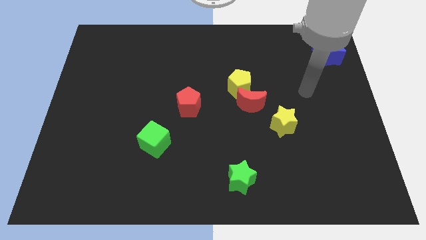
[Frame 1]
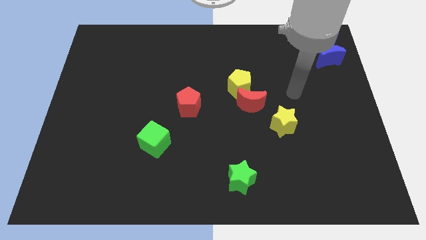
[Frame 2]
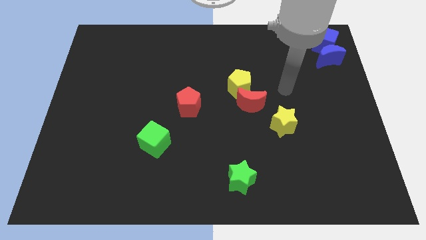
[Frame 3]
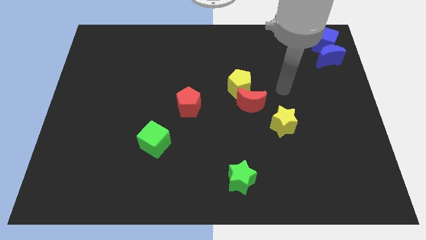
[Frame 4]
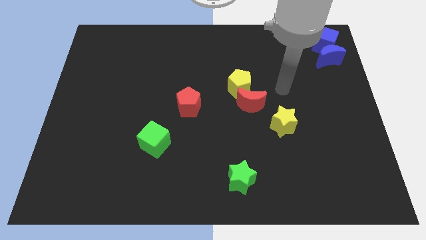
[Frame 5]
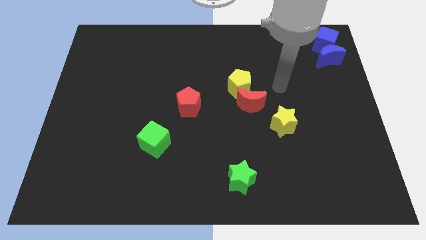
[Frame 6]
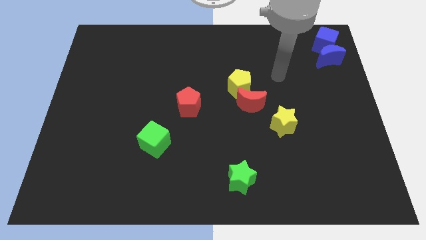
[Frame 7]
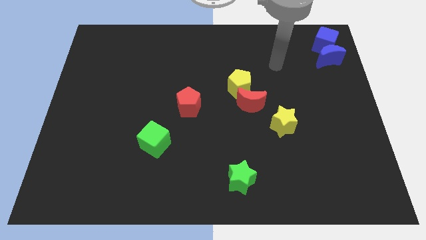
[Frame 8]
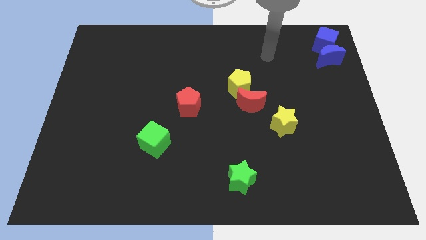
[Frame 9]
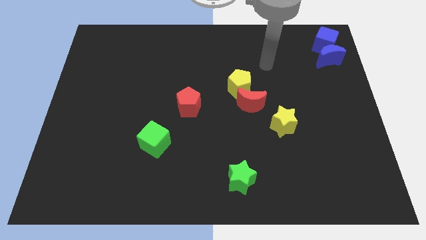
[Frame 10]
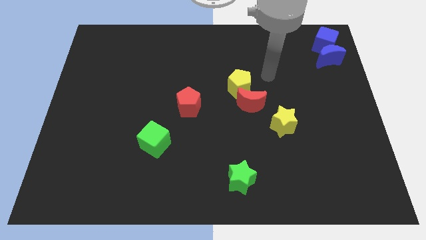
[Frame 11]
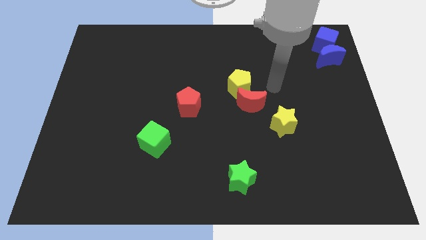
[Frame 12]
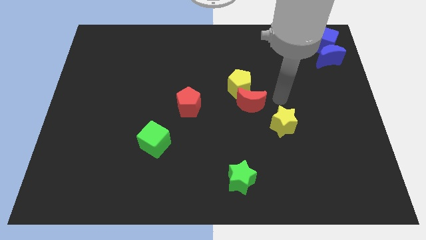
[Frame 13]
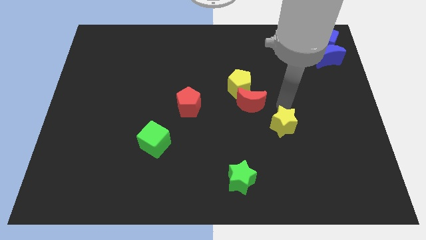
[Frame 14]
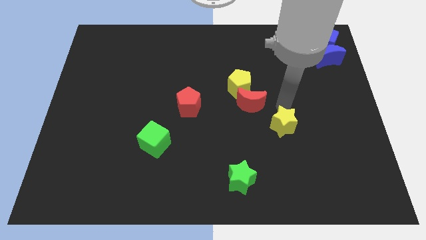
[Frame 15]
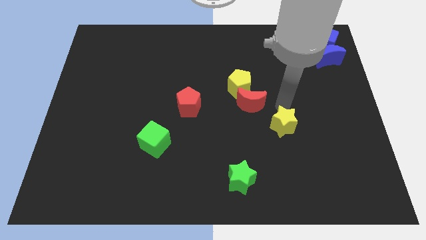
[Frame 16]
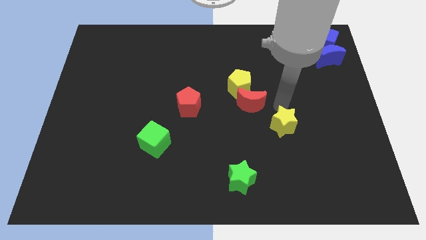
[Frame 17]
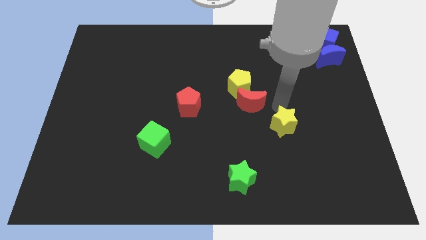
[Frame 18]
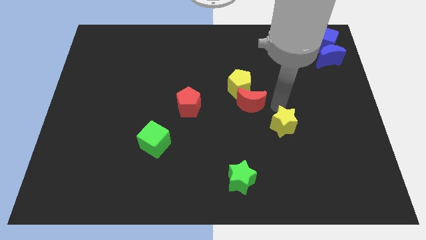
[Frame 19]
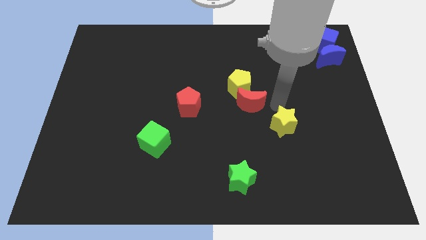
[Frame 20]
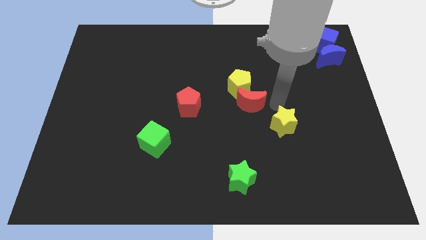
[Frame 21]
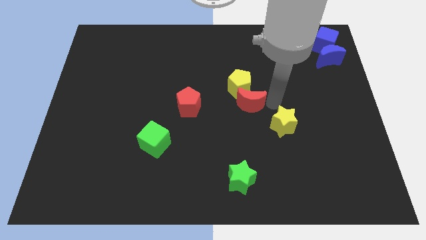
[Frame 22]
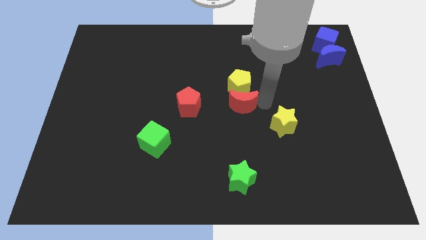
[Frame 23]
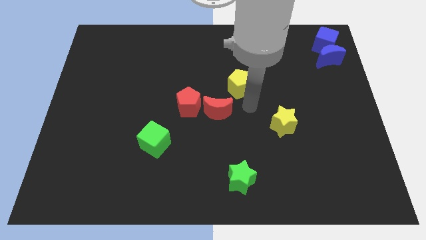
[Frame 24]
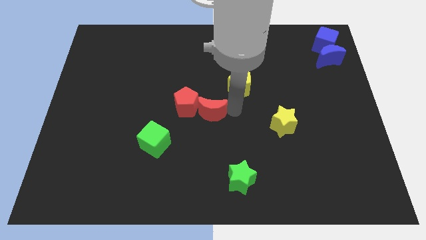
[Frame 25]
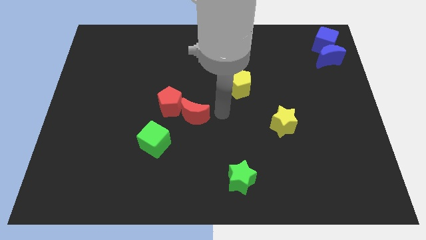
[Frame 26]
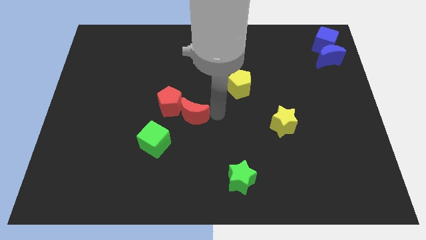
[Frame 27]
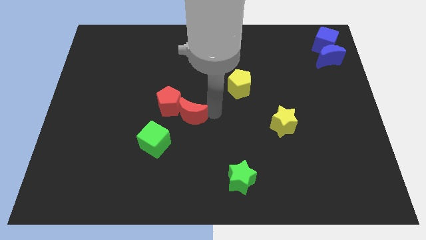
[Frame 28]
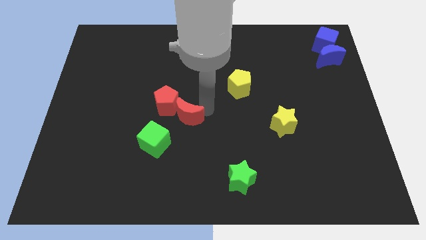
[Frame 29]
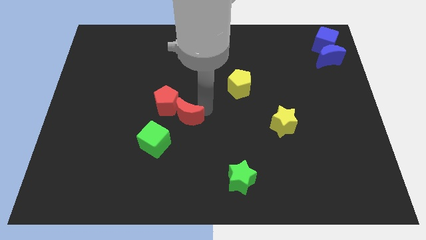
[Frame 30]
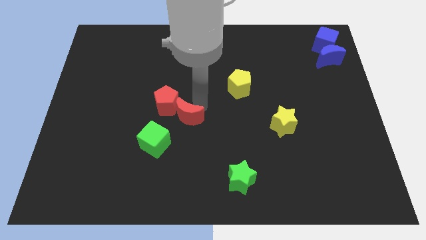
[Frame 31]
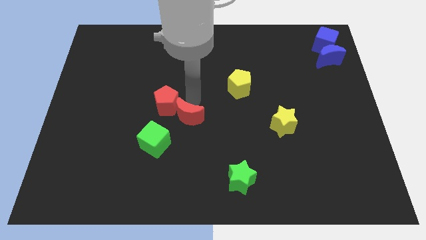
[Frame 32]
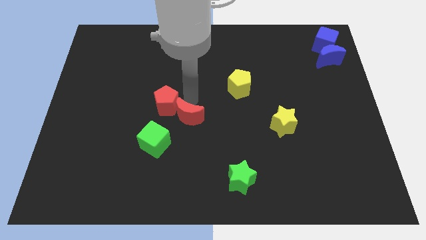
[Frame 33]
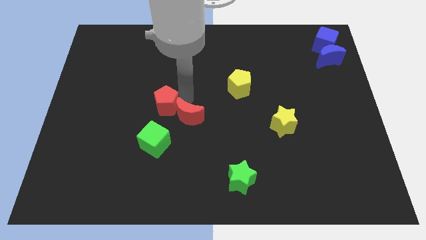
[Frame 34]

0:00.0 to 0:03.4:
push red crescent into the red pentagon

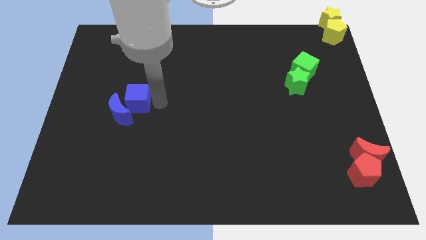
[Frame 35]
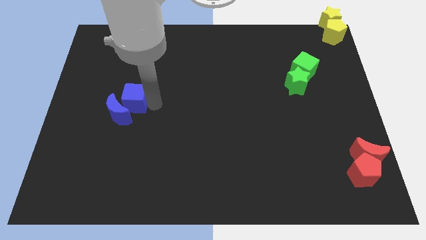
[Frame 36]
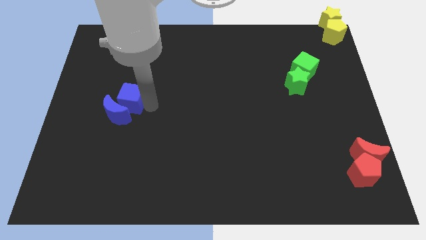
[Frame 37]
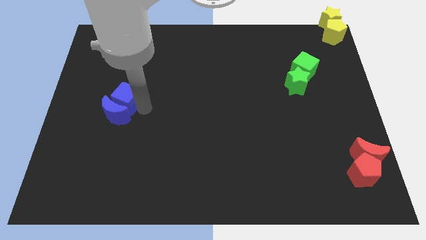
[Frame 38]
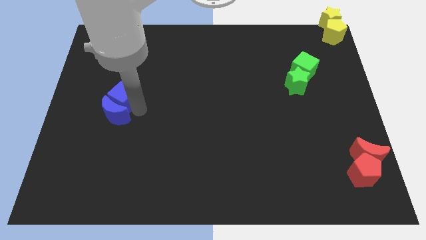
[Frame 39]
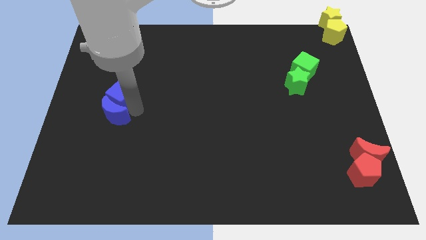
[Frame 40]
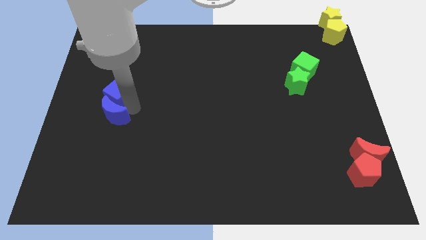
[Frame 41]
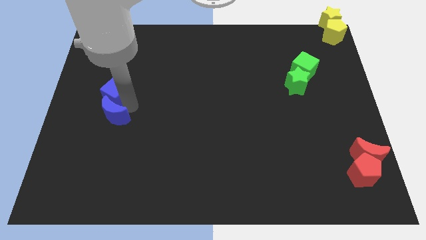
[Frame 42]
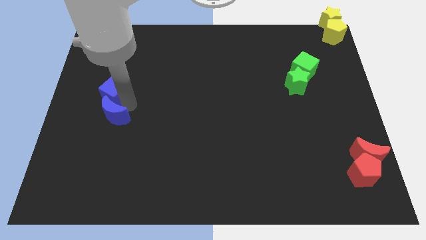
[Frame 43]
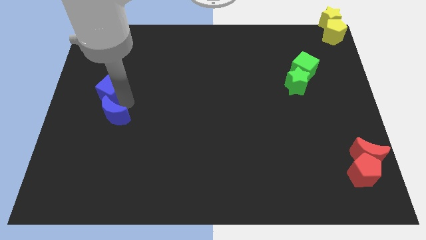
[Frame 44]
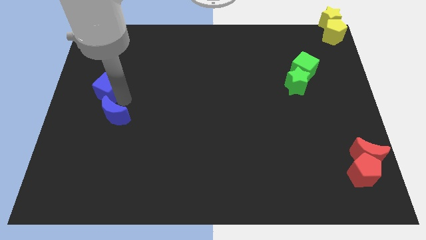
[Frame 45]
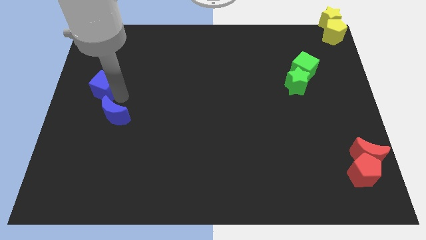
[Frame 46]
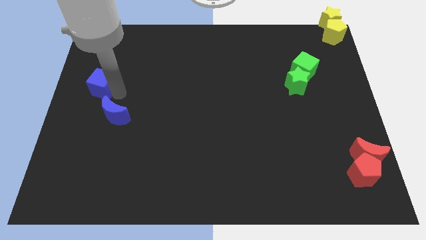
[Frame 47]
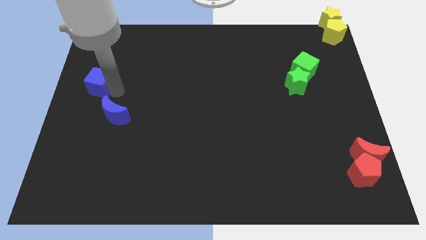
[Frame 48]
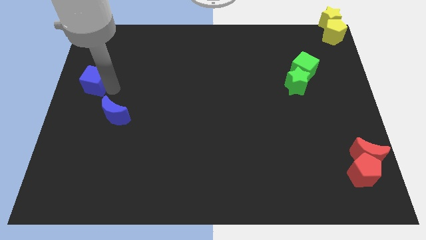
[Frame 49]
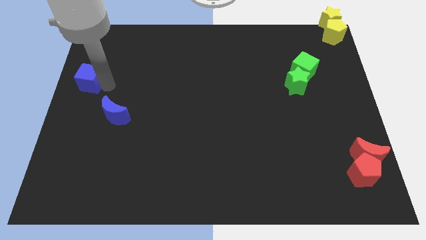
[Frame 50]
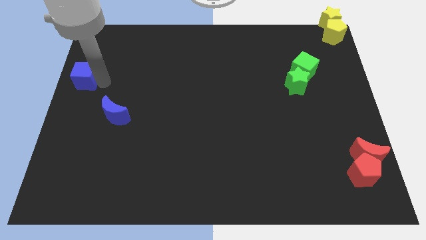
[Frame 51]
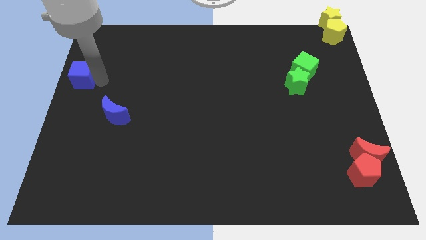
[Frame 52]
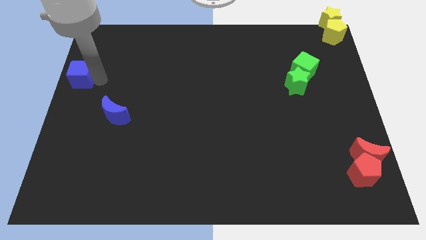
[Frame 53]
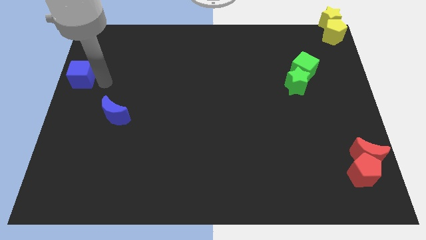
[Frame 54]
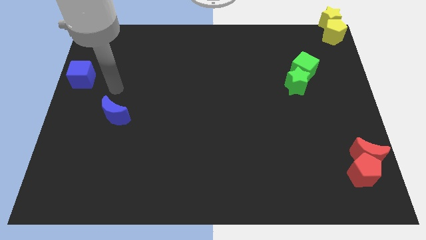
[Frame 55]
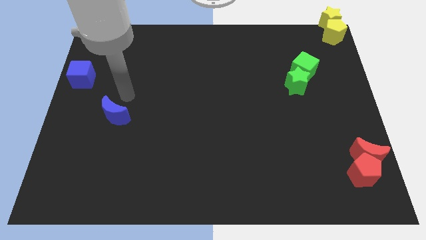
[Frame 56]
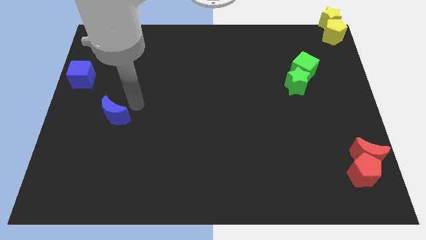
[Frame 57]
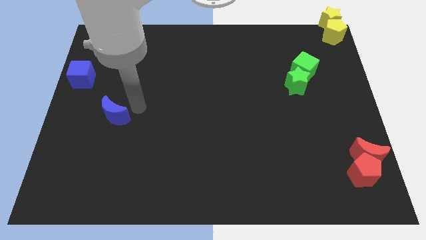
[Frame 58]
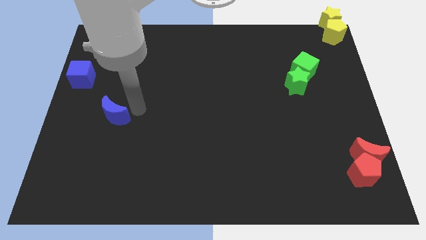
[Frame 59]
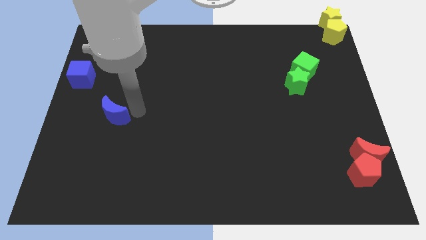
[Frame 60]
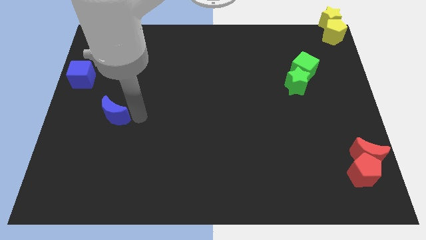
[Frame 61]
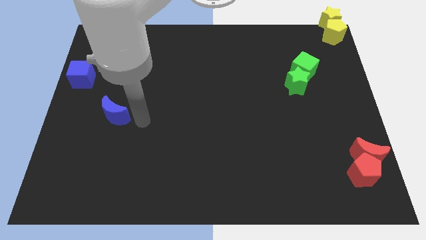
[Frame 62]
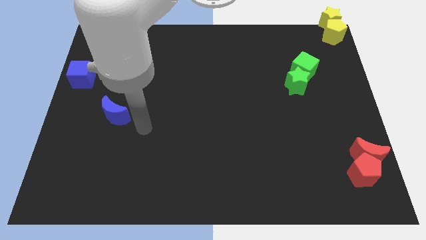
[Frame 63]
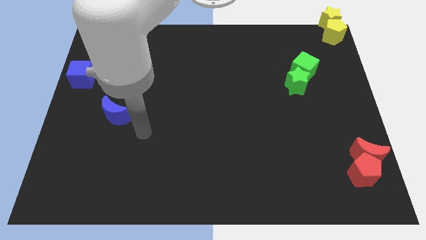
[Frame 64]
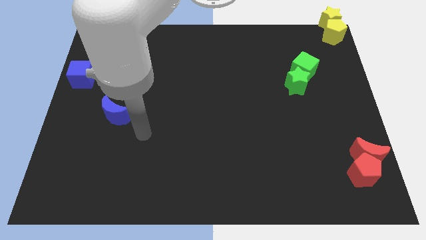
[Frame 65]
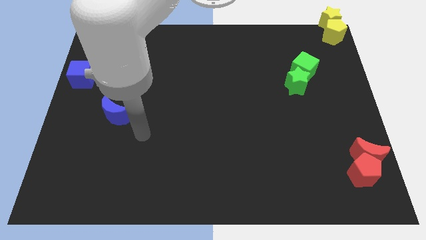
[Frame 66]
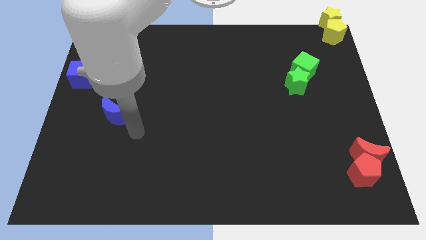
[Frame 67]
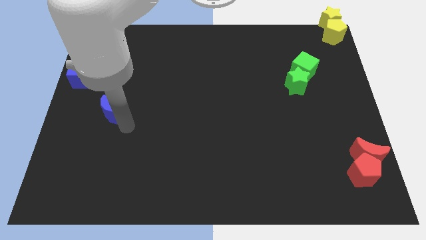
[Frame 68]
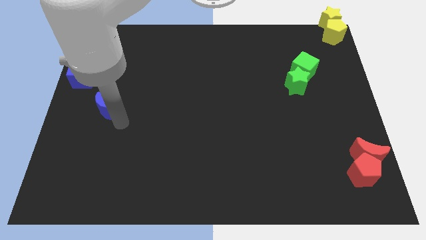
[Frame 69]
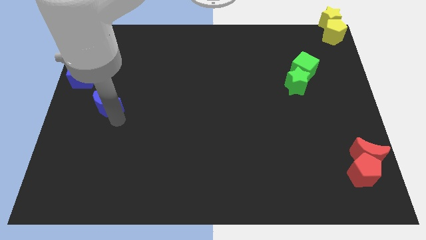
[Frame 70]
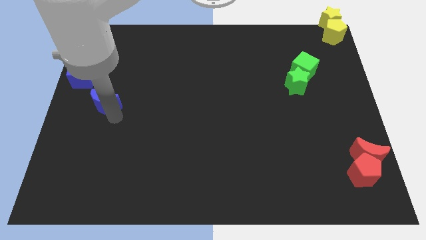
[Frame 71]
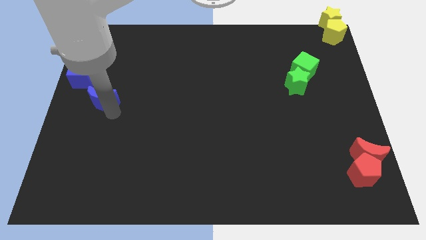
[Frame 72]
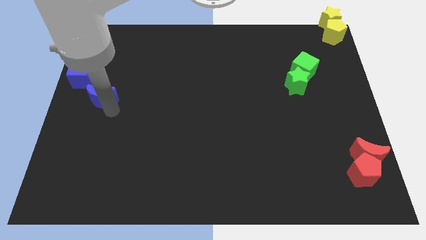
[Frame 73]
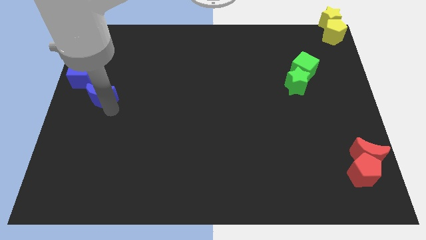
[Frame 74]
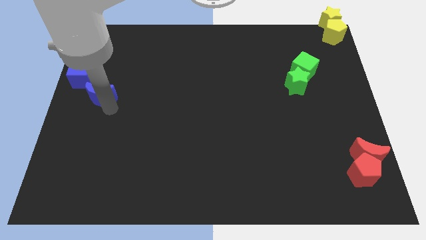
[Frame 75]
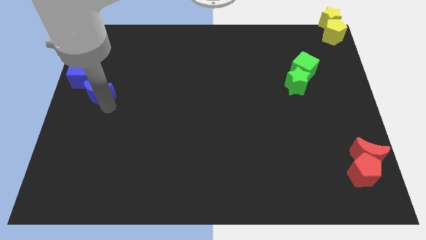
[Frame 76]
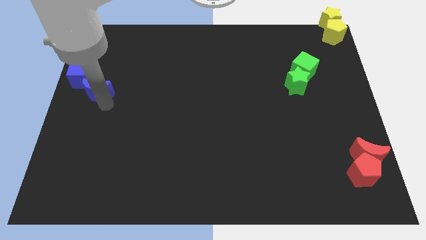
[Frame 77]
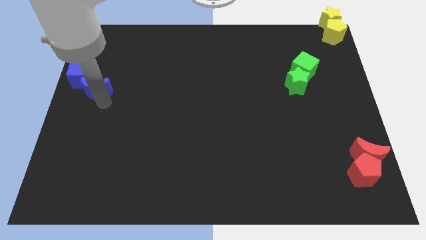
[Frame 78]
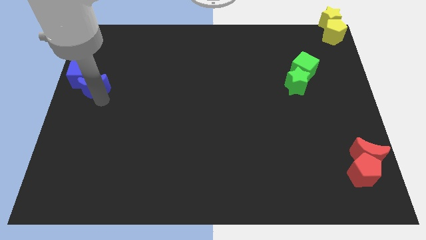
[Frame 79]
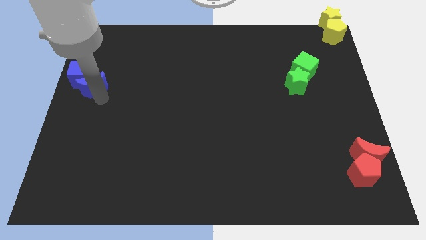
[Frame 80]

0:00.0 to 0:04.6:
push the blue things to the left side of the table

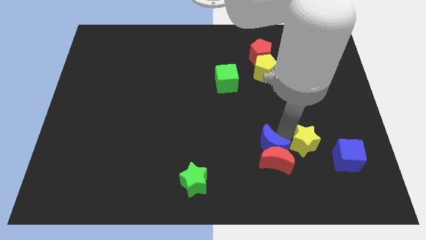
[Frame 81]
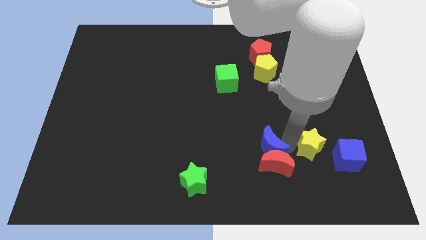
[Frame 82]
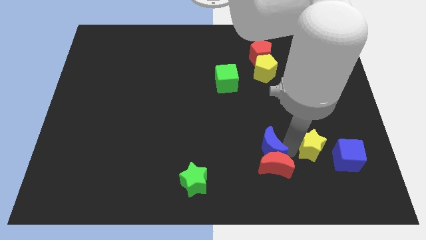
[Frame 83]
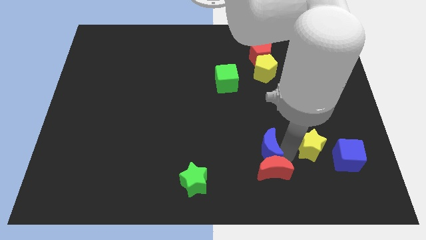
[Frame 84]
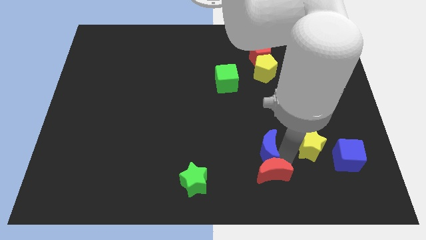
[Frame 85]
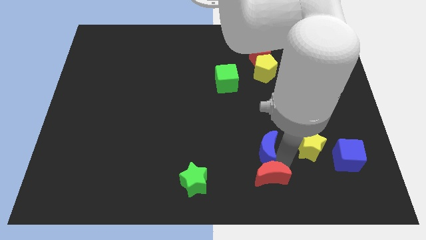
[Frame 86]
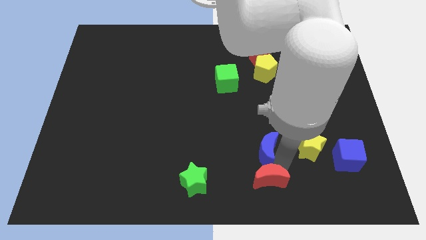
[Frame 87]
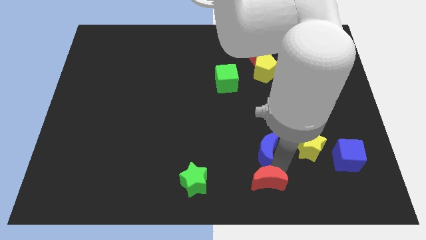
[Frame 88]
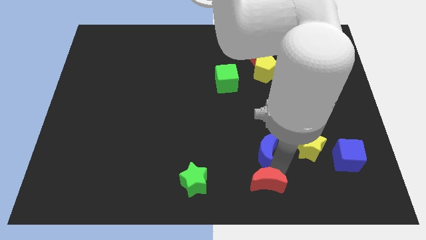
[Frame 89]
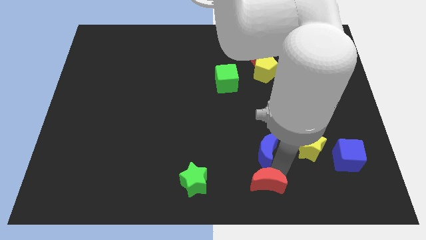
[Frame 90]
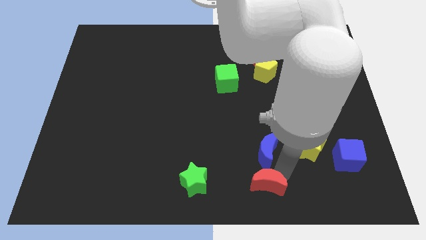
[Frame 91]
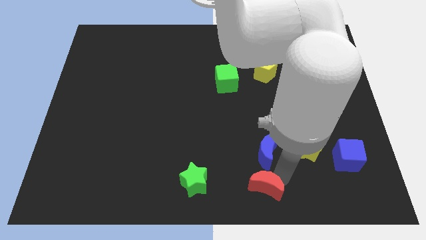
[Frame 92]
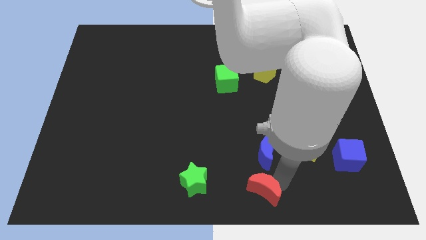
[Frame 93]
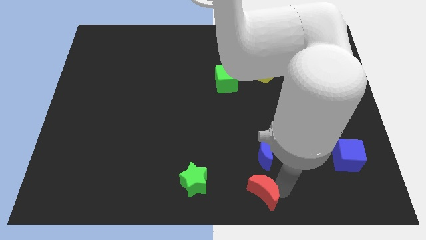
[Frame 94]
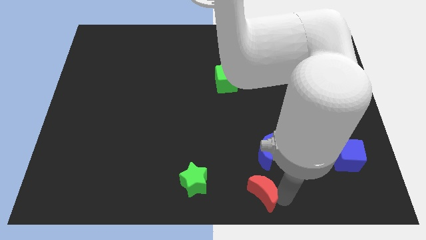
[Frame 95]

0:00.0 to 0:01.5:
separate the red crescent from the blue crescent
